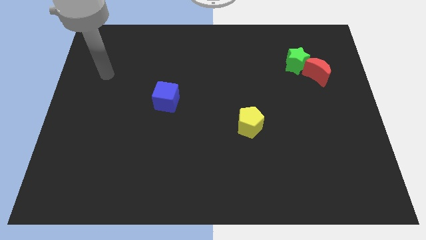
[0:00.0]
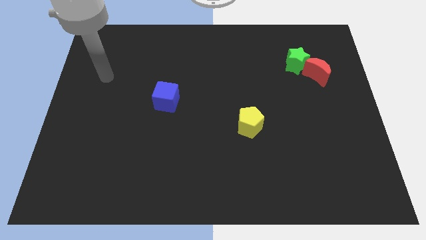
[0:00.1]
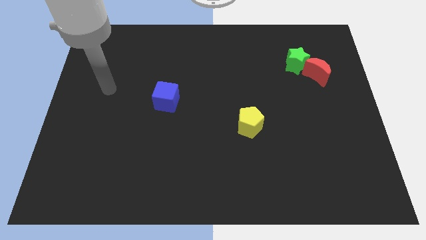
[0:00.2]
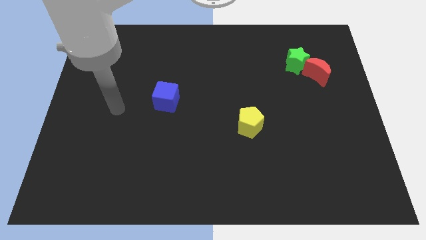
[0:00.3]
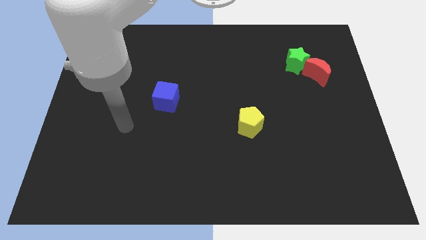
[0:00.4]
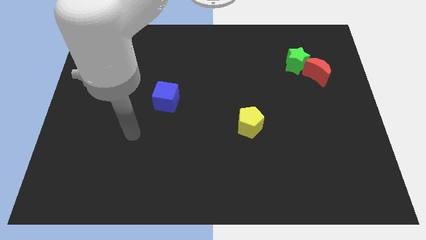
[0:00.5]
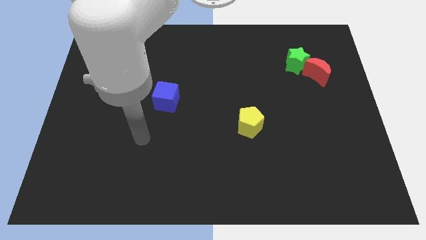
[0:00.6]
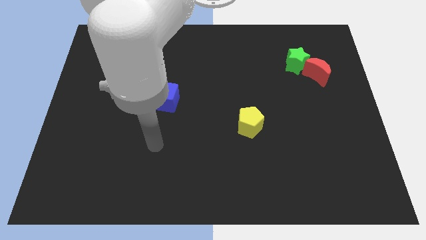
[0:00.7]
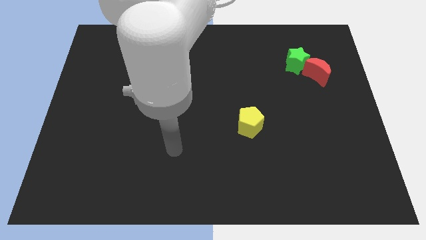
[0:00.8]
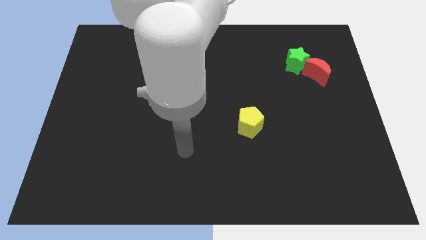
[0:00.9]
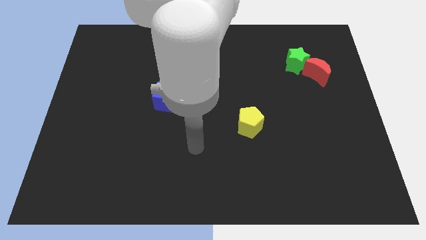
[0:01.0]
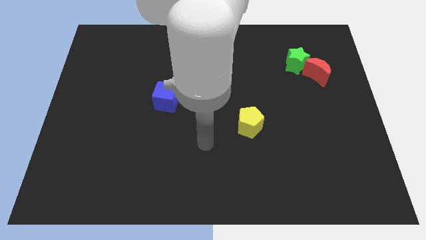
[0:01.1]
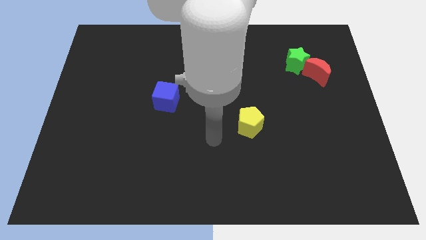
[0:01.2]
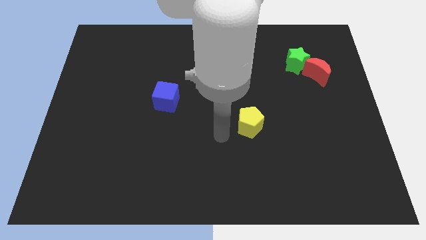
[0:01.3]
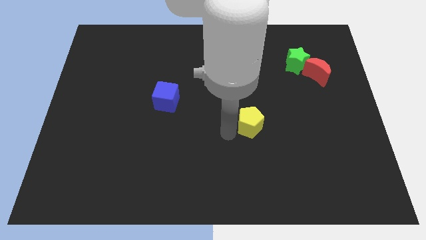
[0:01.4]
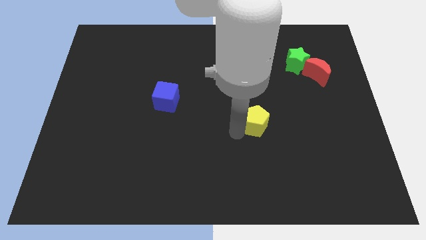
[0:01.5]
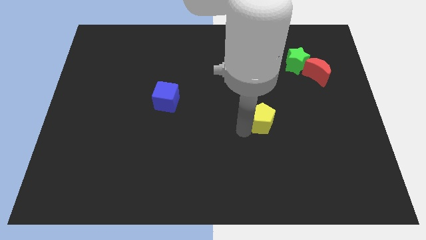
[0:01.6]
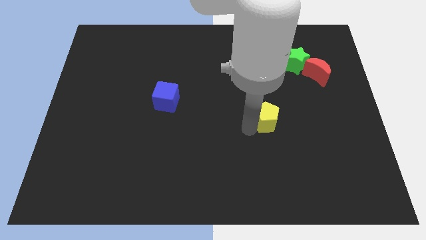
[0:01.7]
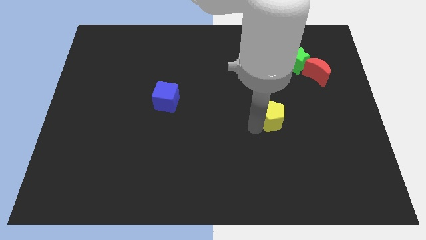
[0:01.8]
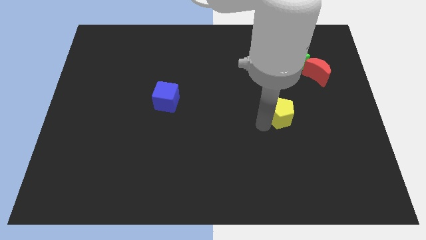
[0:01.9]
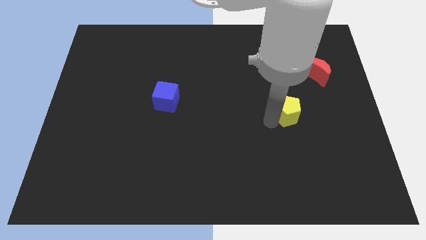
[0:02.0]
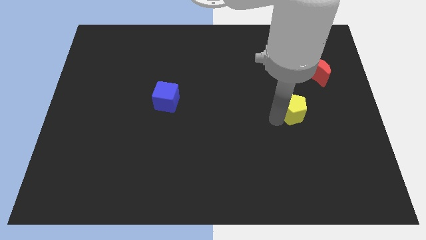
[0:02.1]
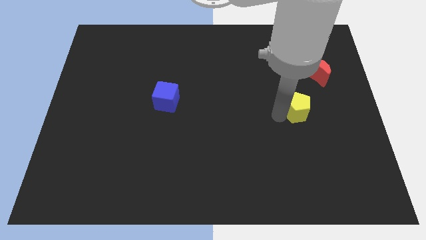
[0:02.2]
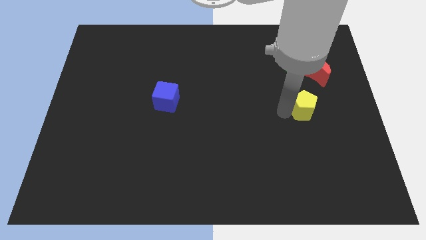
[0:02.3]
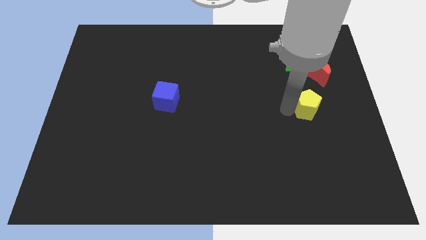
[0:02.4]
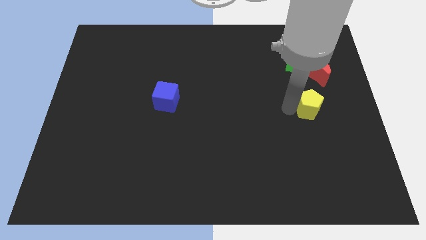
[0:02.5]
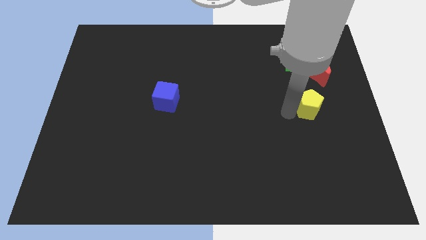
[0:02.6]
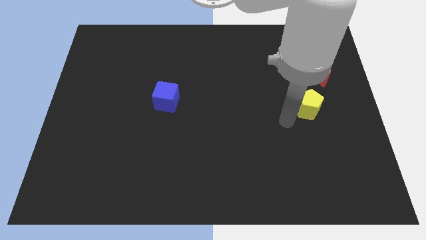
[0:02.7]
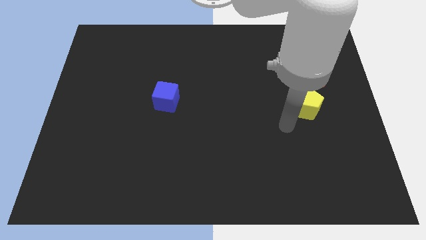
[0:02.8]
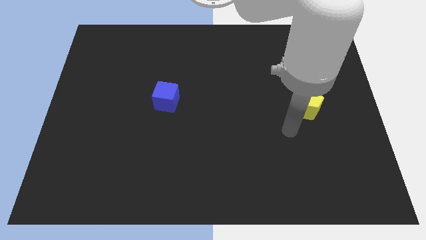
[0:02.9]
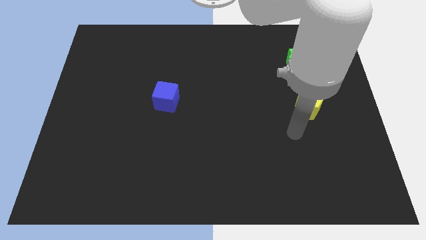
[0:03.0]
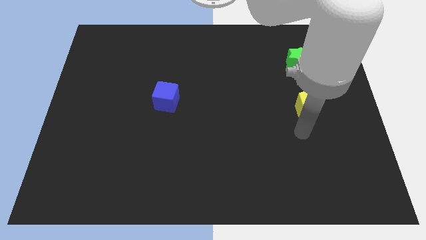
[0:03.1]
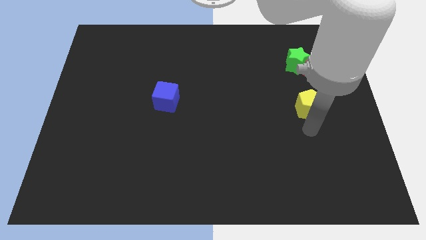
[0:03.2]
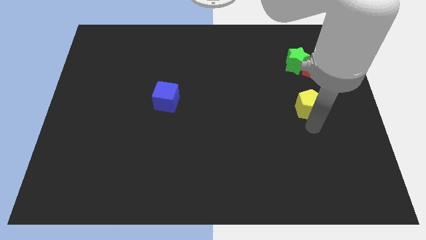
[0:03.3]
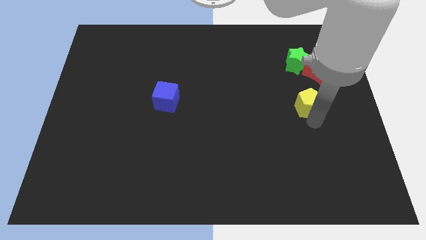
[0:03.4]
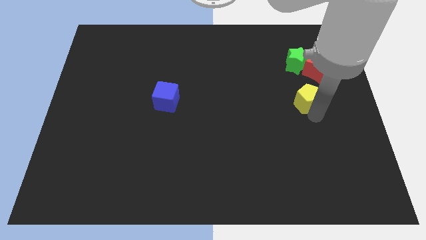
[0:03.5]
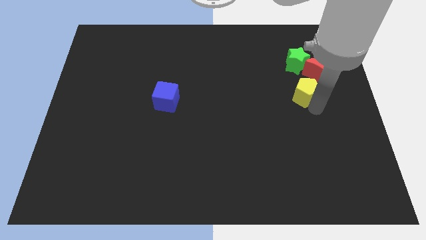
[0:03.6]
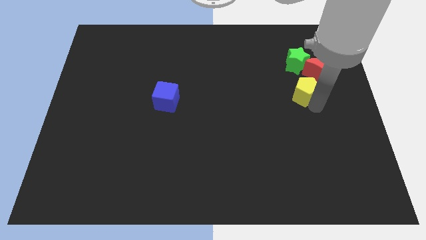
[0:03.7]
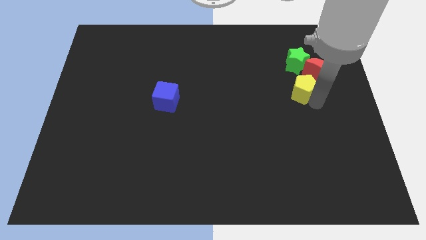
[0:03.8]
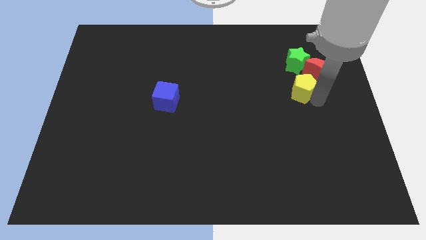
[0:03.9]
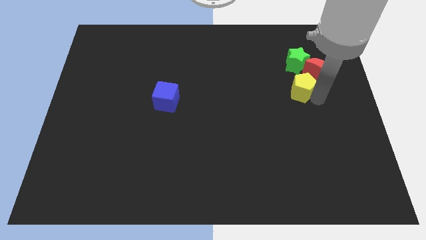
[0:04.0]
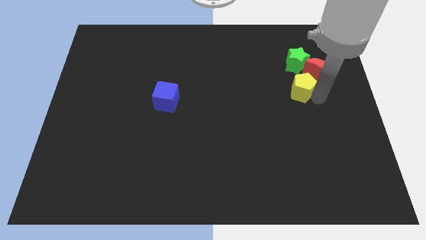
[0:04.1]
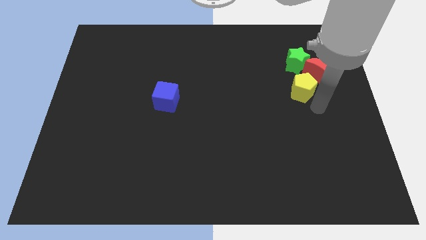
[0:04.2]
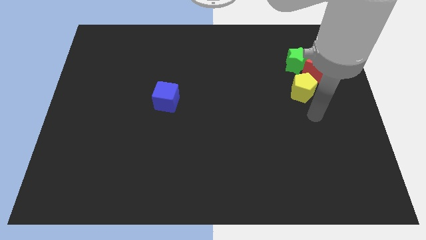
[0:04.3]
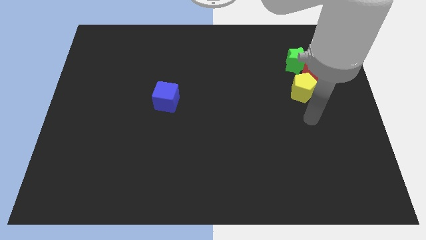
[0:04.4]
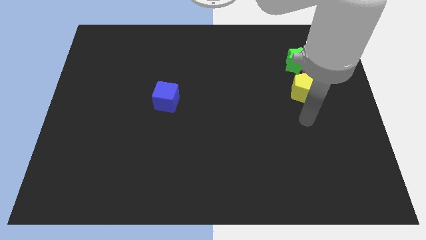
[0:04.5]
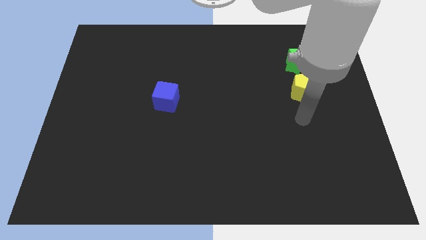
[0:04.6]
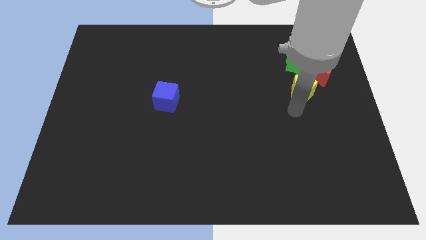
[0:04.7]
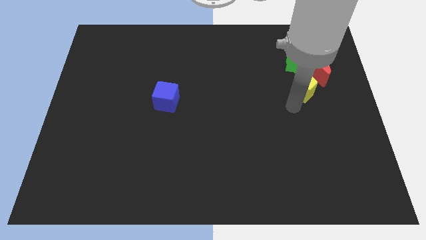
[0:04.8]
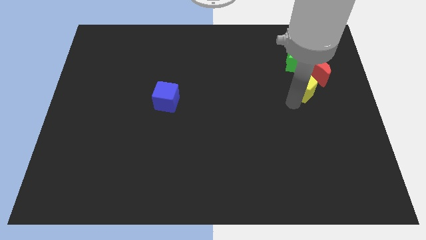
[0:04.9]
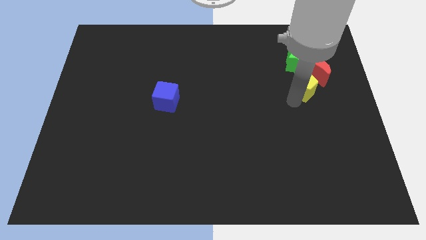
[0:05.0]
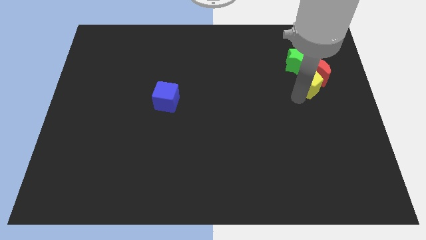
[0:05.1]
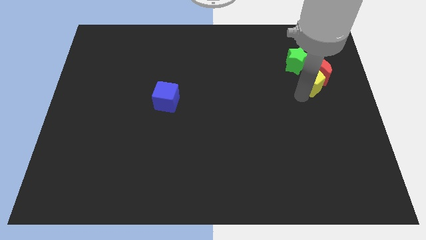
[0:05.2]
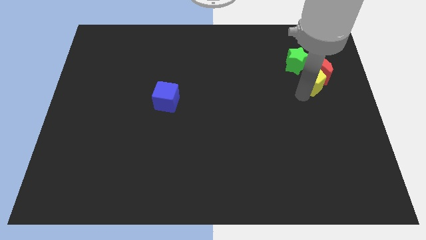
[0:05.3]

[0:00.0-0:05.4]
put the pentagon to the red block

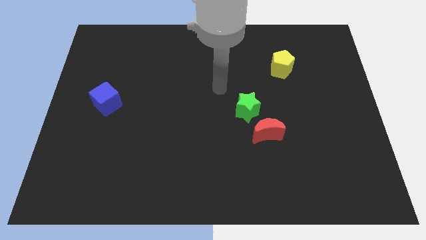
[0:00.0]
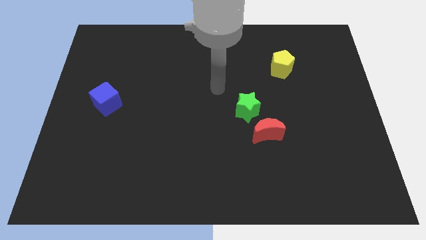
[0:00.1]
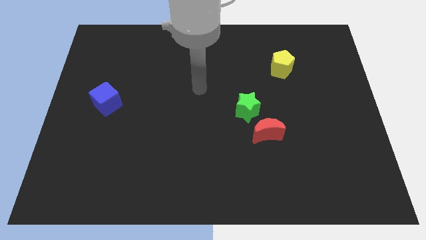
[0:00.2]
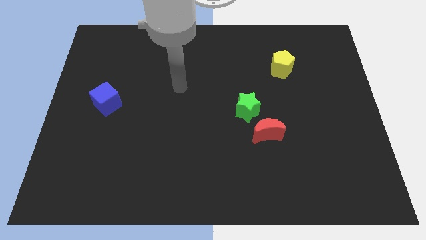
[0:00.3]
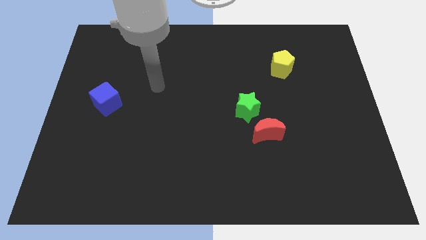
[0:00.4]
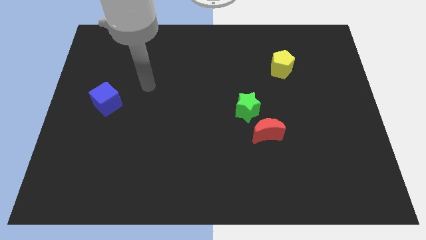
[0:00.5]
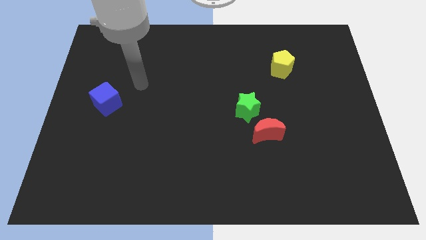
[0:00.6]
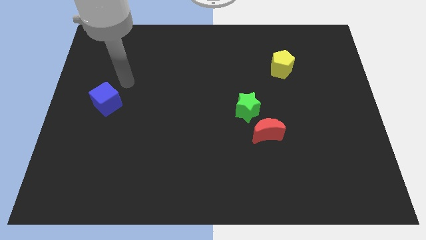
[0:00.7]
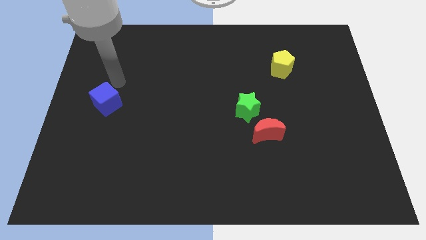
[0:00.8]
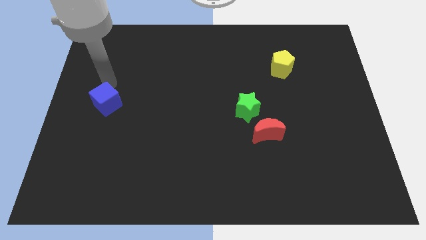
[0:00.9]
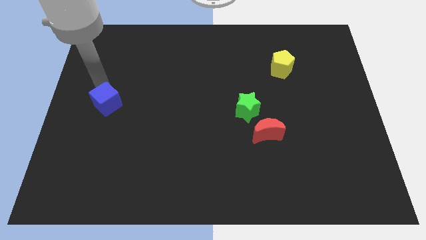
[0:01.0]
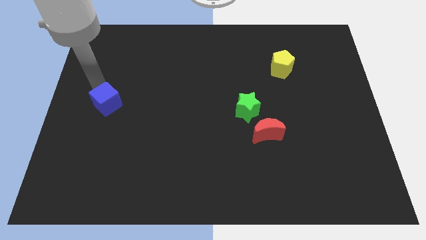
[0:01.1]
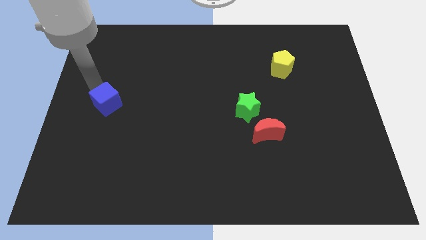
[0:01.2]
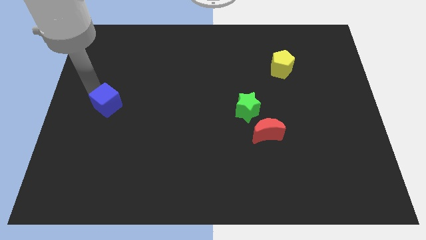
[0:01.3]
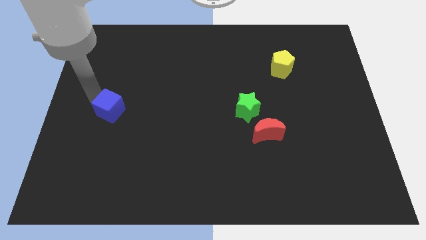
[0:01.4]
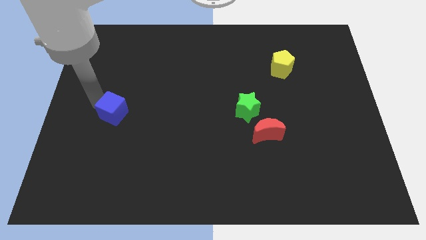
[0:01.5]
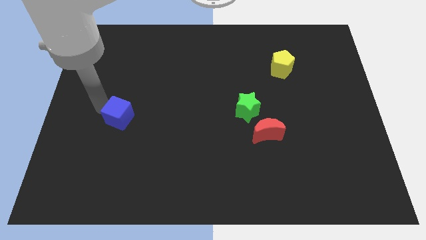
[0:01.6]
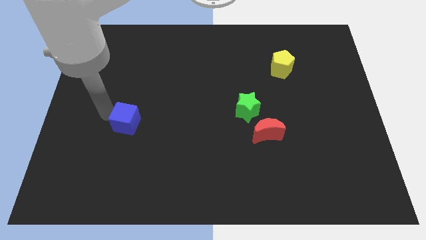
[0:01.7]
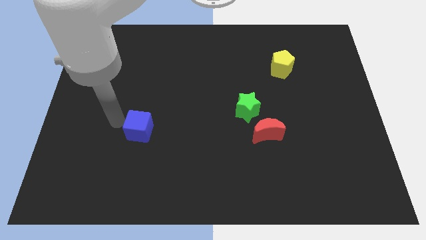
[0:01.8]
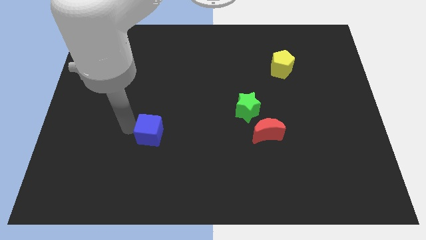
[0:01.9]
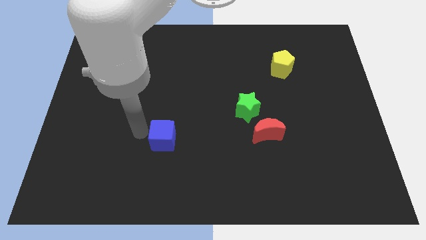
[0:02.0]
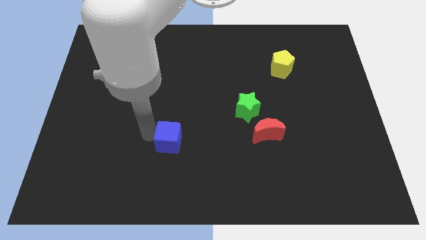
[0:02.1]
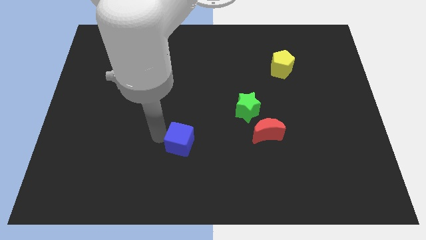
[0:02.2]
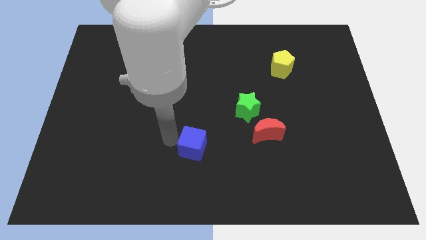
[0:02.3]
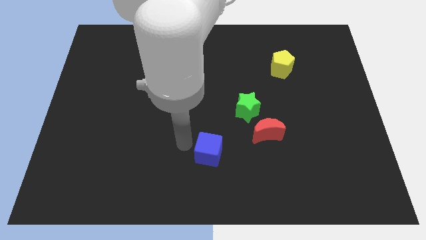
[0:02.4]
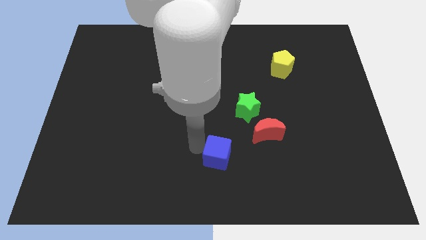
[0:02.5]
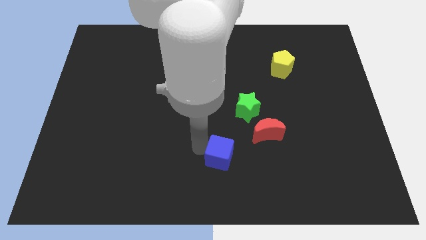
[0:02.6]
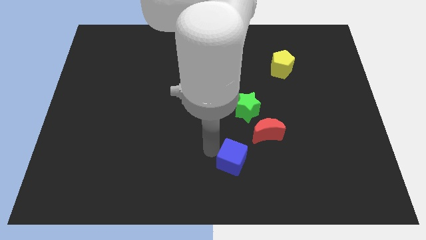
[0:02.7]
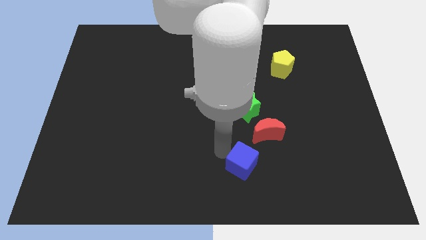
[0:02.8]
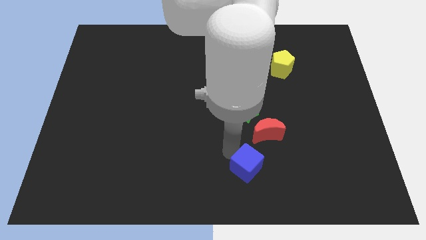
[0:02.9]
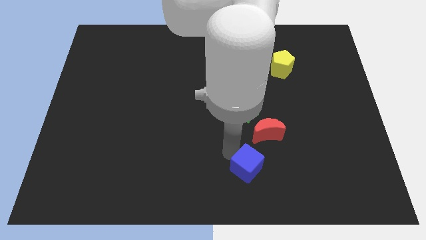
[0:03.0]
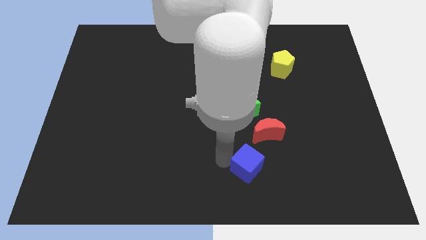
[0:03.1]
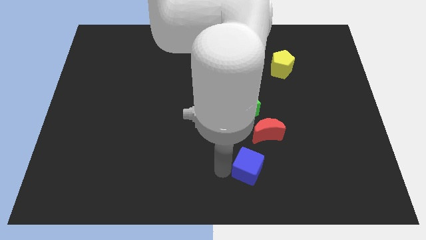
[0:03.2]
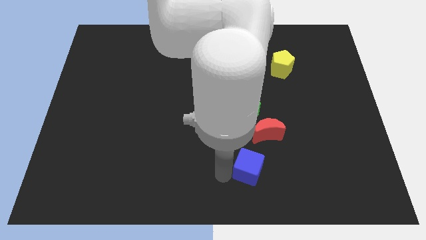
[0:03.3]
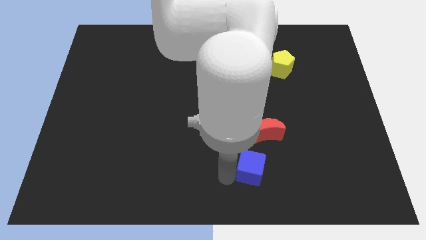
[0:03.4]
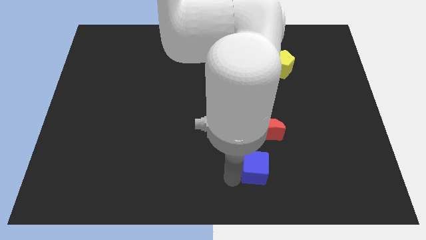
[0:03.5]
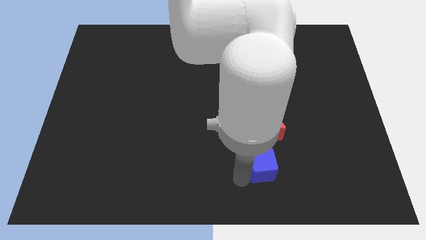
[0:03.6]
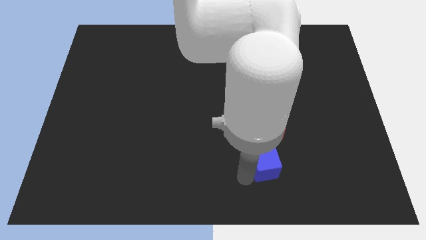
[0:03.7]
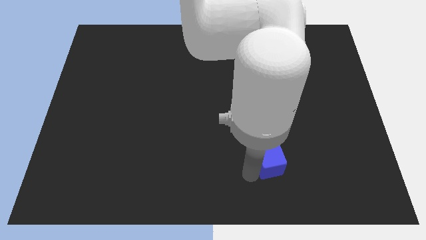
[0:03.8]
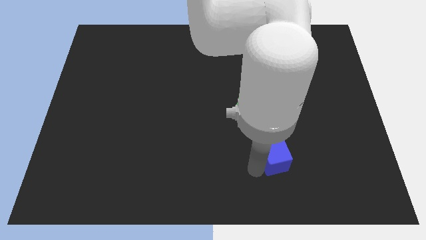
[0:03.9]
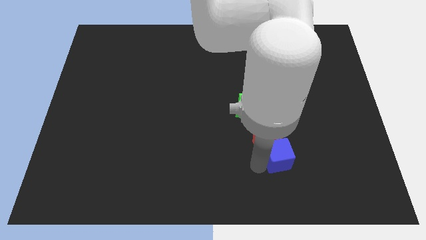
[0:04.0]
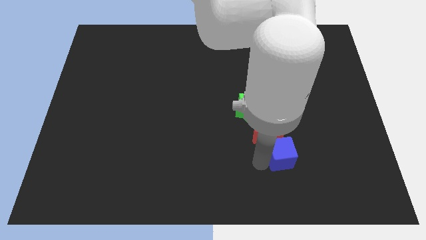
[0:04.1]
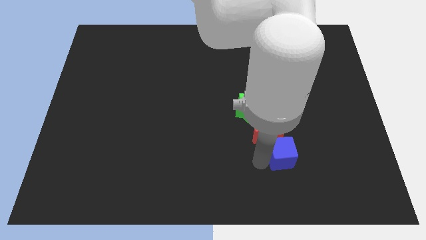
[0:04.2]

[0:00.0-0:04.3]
move the cube towards the moon
